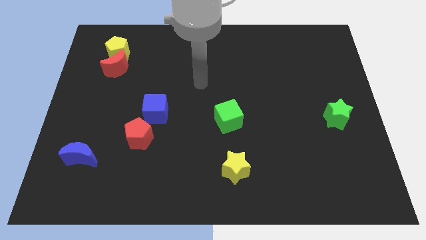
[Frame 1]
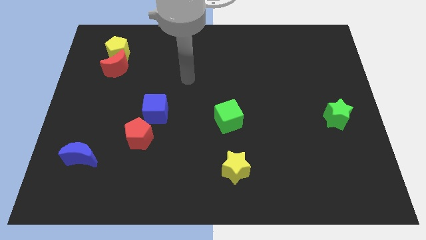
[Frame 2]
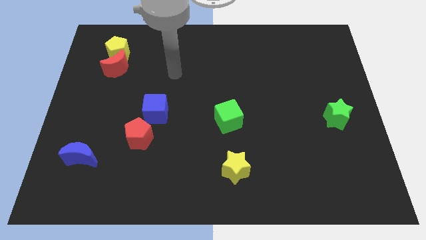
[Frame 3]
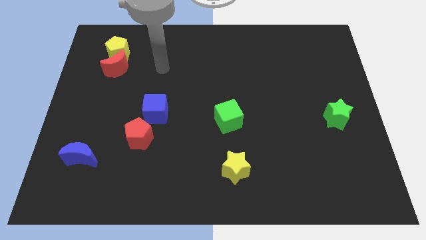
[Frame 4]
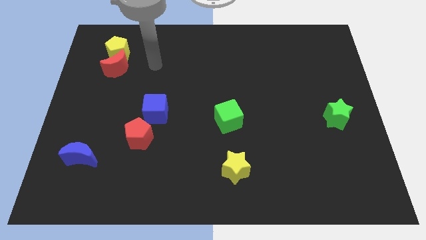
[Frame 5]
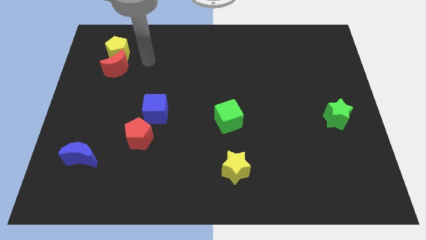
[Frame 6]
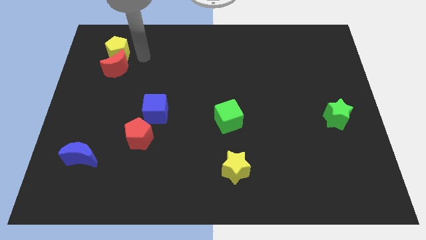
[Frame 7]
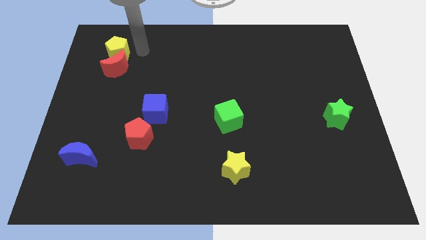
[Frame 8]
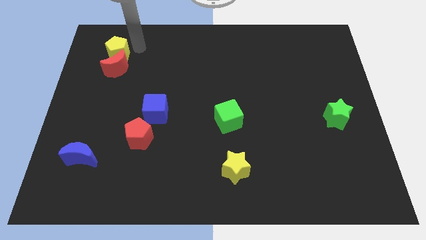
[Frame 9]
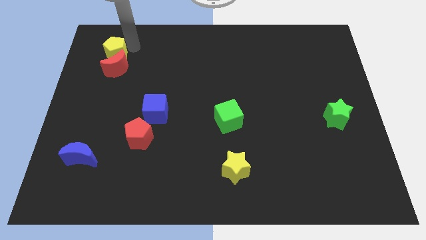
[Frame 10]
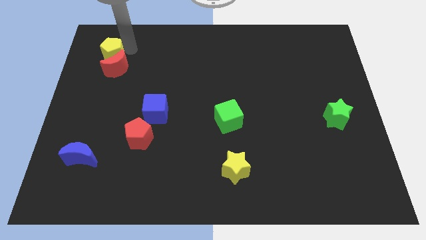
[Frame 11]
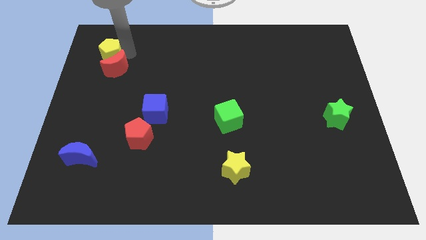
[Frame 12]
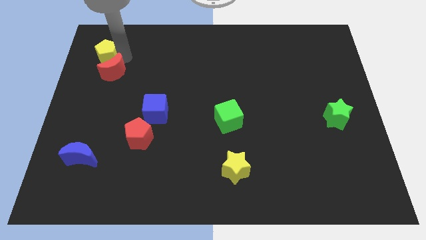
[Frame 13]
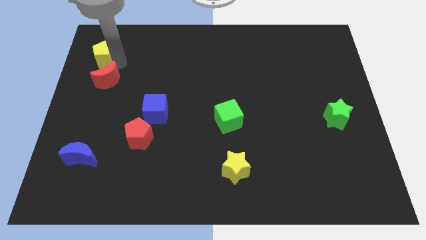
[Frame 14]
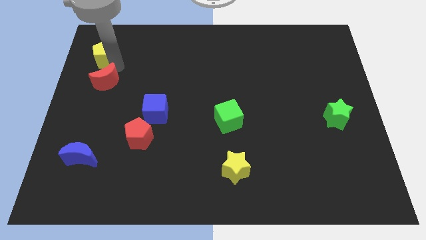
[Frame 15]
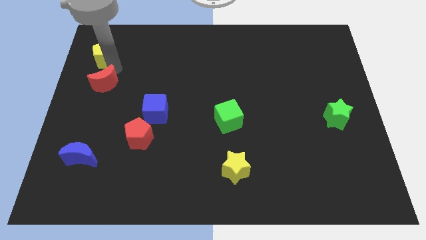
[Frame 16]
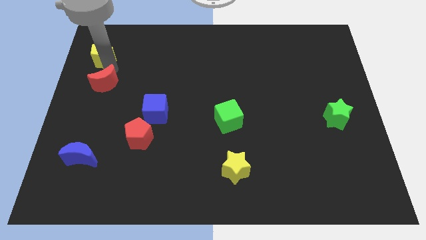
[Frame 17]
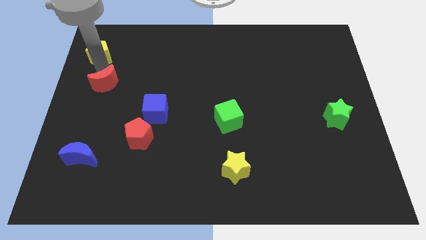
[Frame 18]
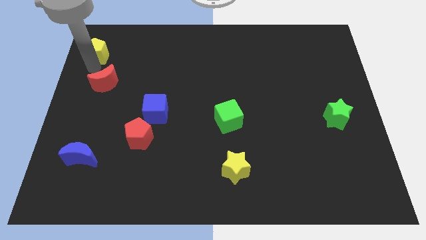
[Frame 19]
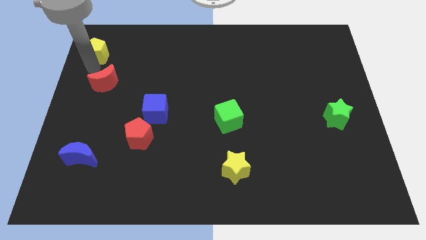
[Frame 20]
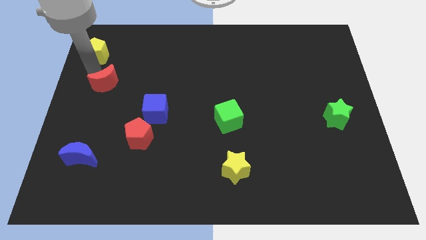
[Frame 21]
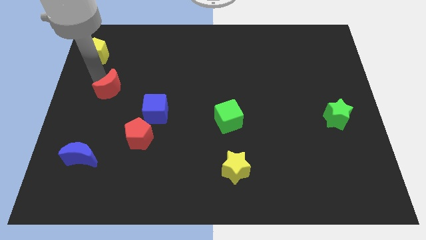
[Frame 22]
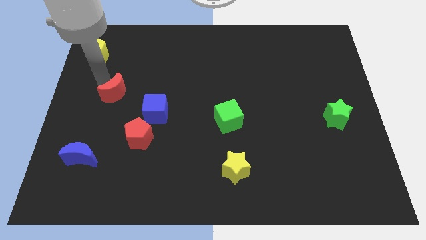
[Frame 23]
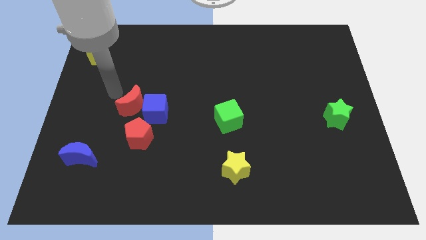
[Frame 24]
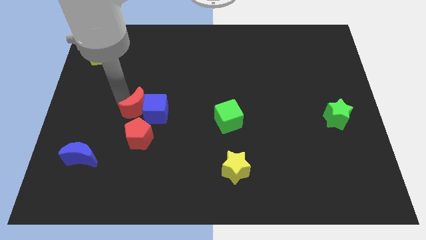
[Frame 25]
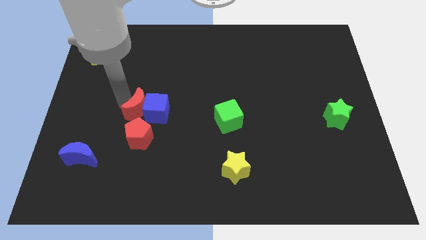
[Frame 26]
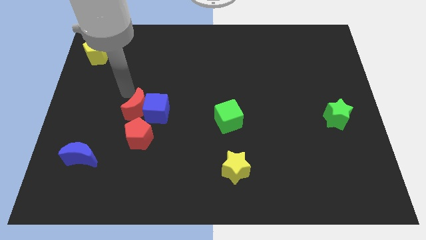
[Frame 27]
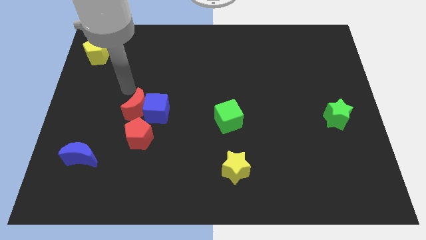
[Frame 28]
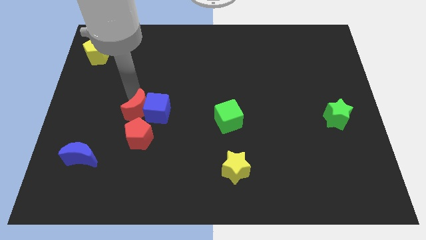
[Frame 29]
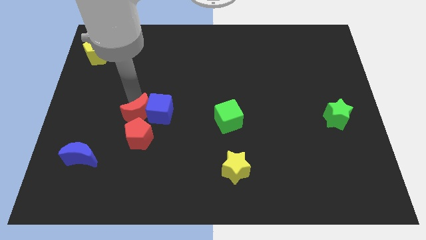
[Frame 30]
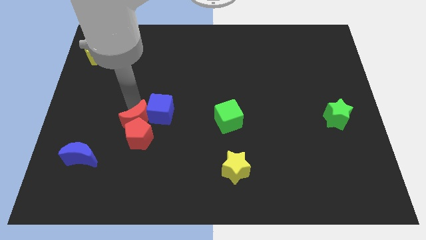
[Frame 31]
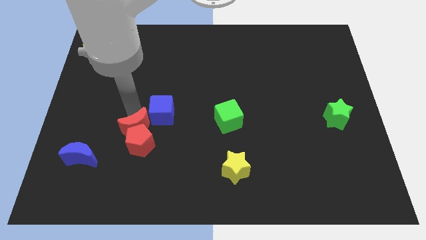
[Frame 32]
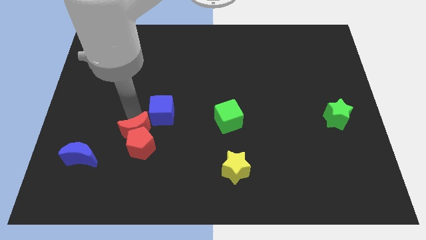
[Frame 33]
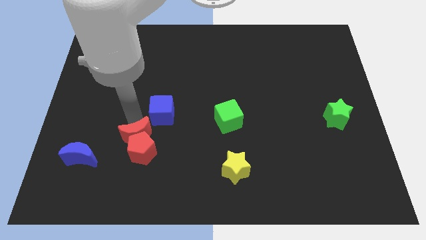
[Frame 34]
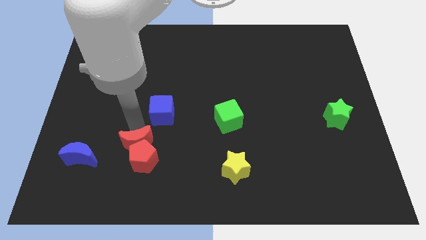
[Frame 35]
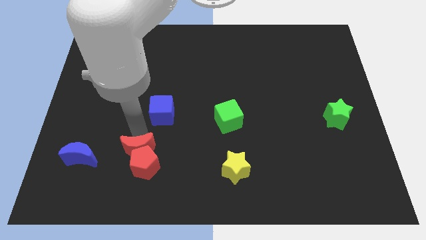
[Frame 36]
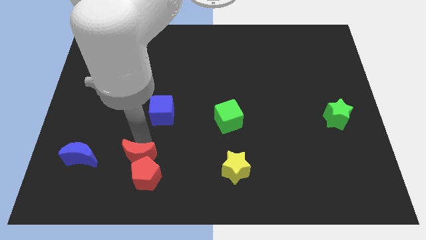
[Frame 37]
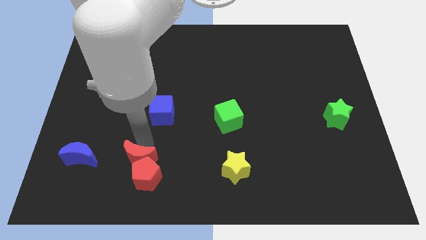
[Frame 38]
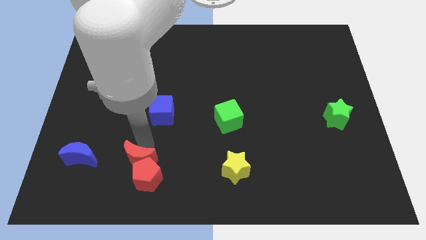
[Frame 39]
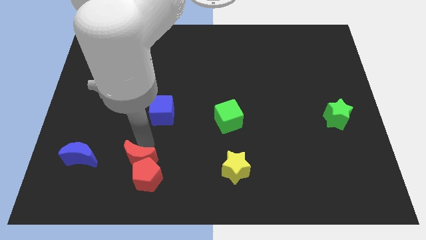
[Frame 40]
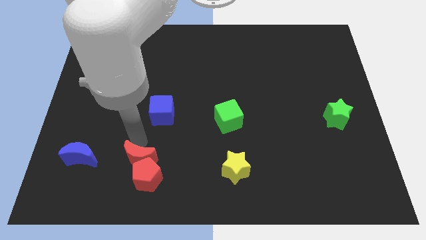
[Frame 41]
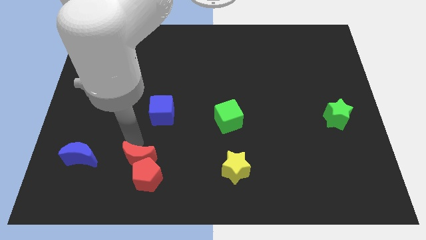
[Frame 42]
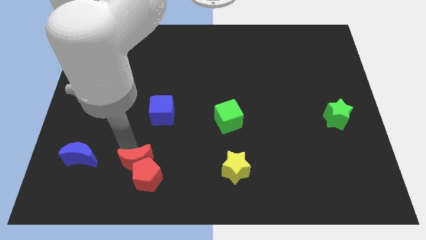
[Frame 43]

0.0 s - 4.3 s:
slide the red crescent towards the red pentagon

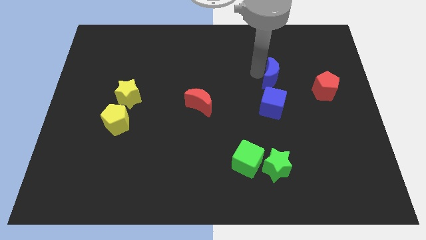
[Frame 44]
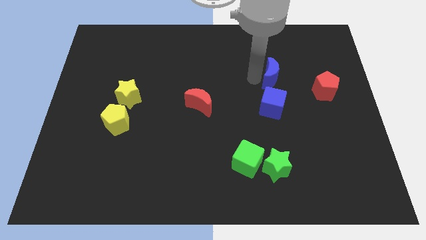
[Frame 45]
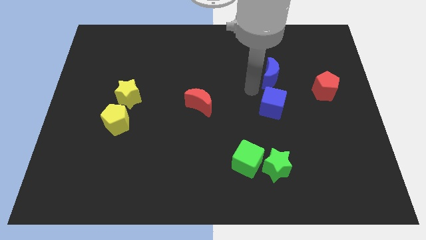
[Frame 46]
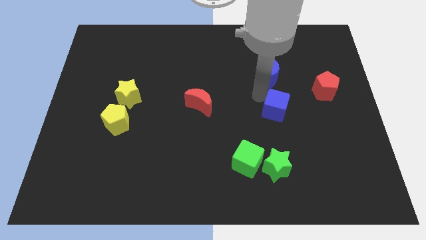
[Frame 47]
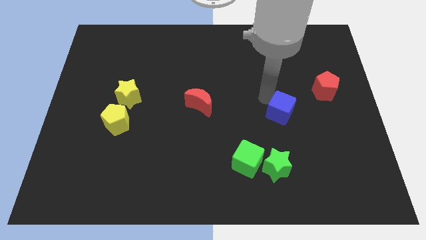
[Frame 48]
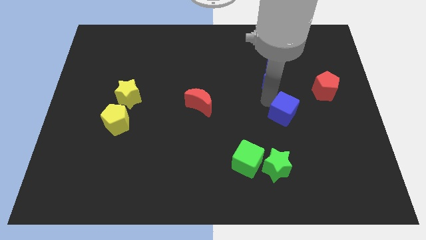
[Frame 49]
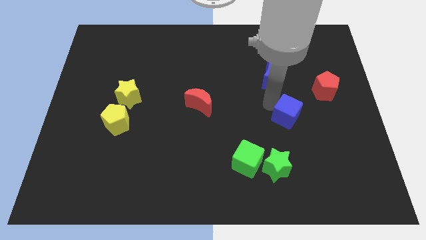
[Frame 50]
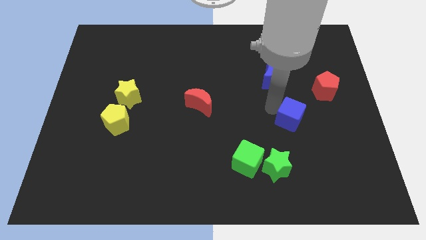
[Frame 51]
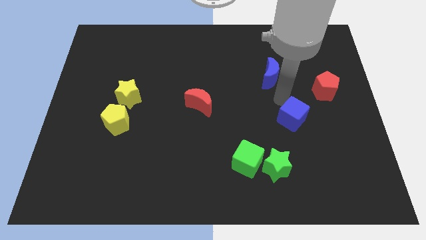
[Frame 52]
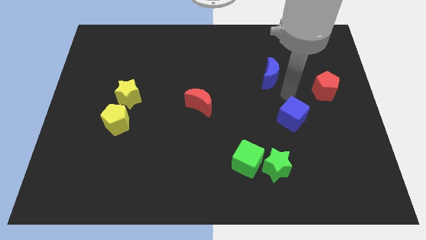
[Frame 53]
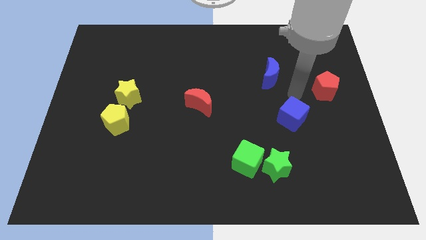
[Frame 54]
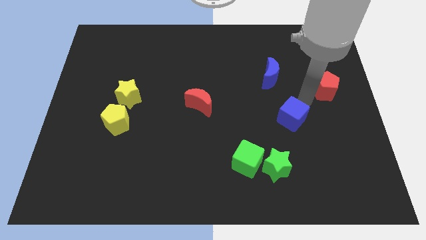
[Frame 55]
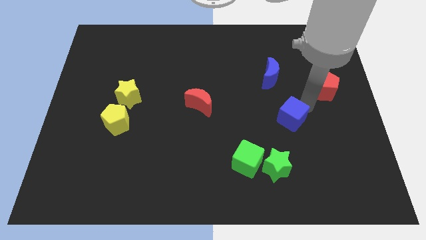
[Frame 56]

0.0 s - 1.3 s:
separate the blue cube and the blue crescent

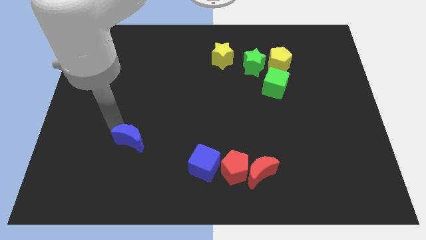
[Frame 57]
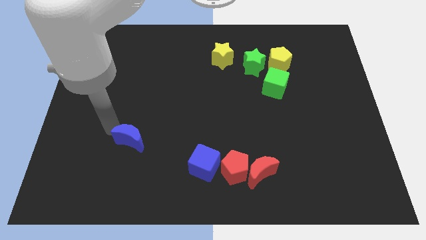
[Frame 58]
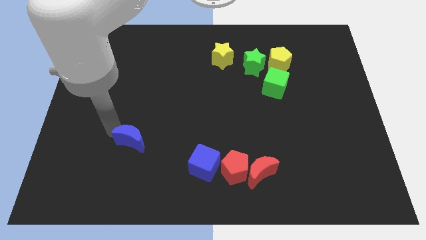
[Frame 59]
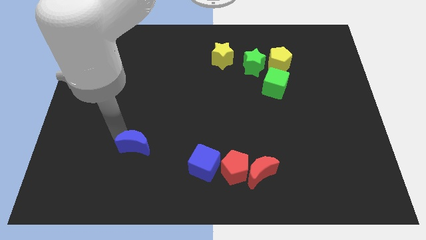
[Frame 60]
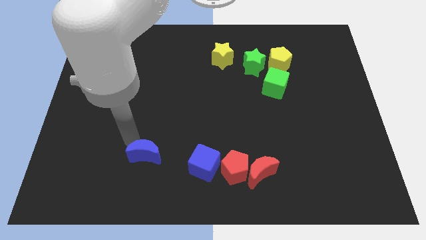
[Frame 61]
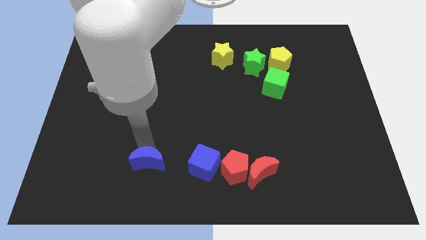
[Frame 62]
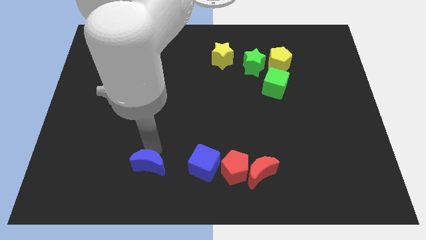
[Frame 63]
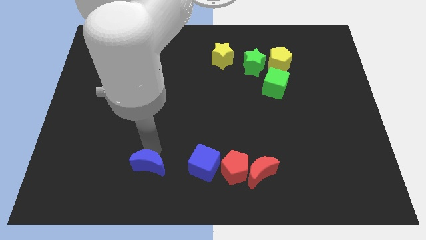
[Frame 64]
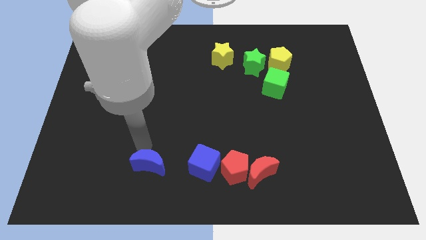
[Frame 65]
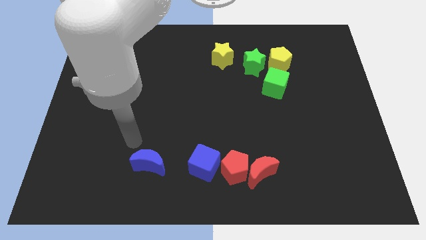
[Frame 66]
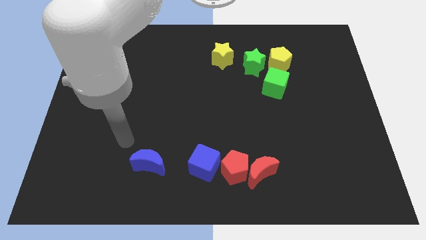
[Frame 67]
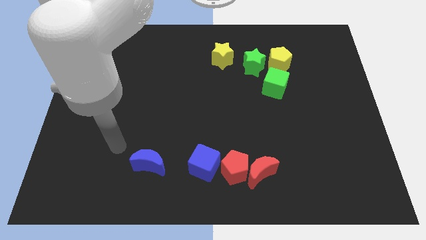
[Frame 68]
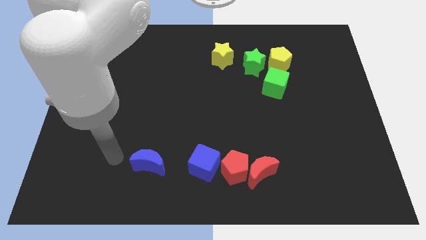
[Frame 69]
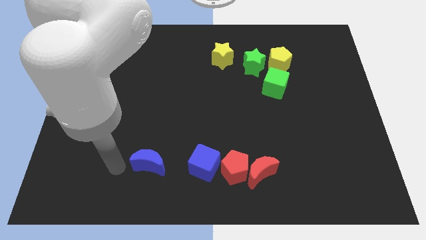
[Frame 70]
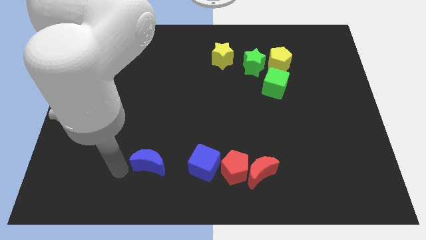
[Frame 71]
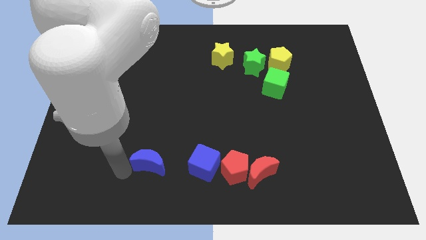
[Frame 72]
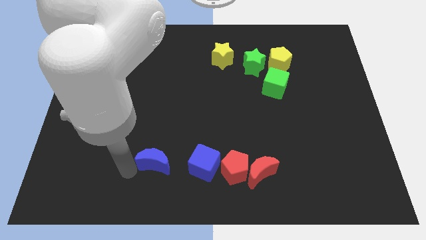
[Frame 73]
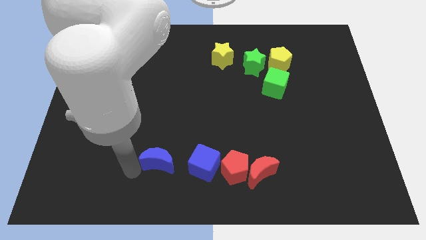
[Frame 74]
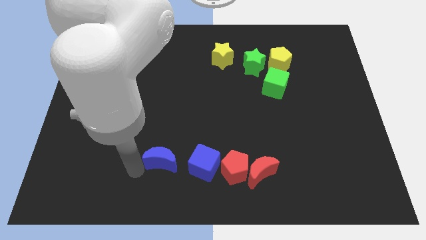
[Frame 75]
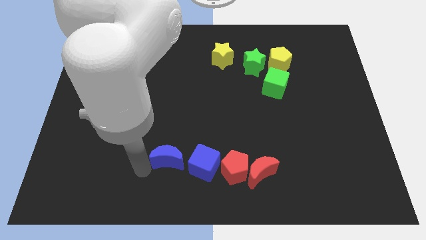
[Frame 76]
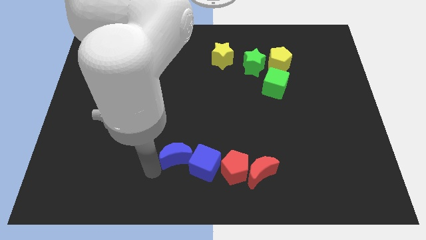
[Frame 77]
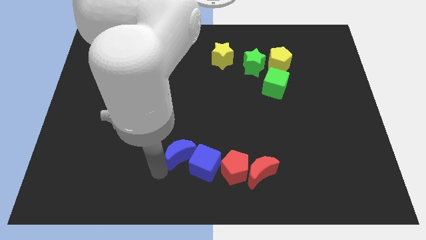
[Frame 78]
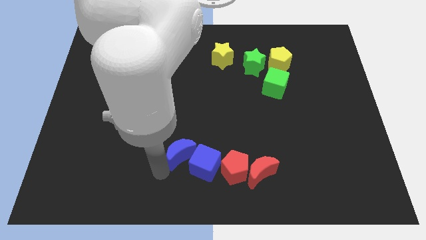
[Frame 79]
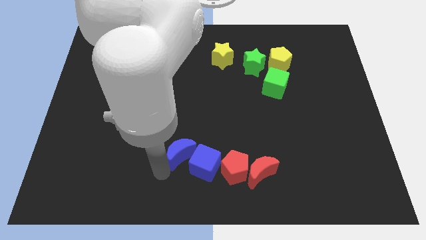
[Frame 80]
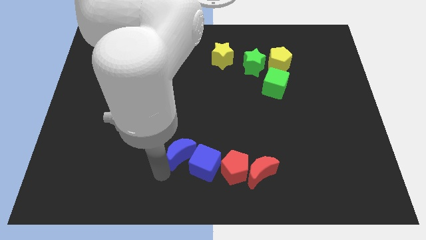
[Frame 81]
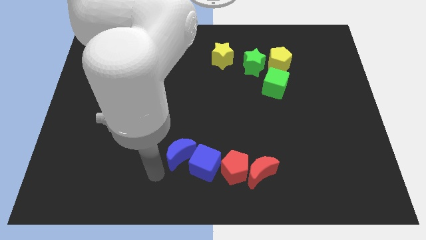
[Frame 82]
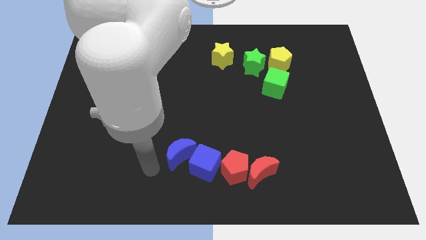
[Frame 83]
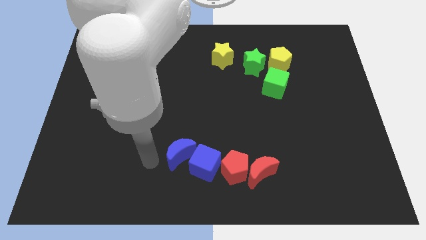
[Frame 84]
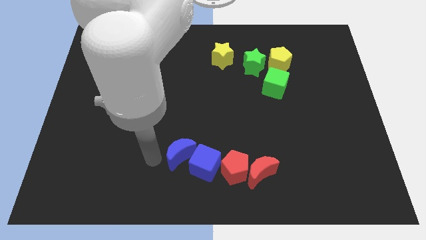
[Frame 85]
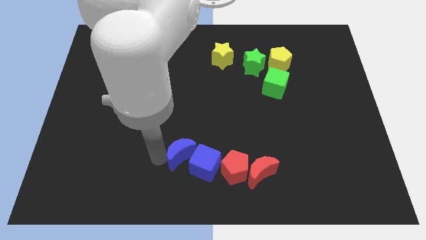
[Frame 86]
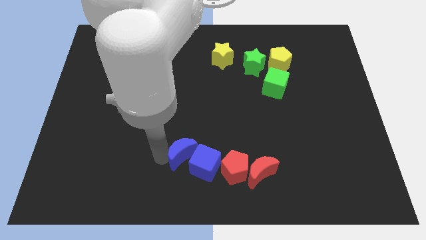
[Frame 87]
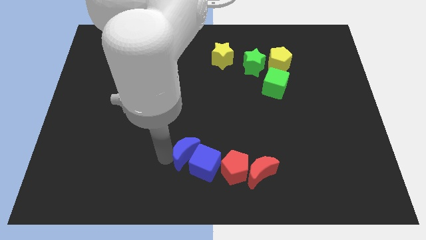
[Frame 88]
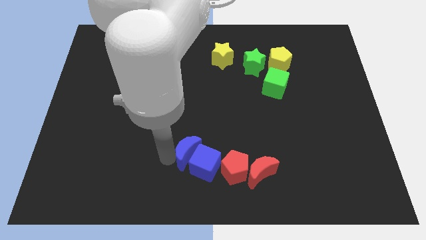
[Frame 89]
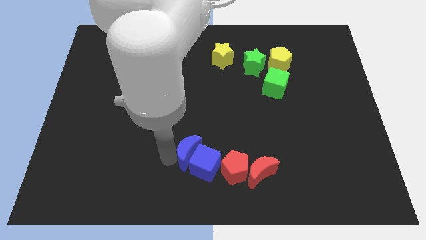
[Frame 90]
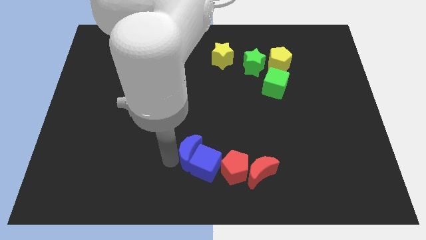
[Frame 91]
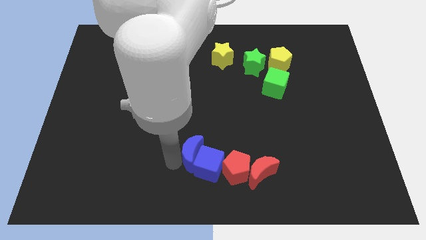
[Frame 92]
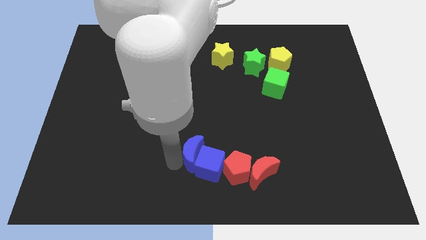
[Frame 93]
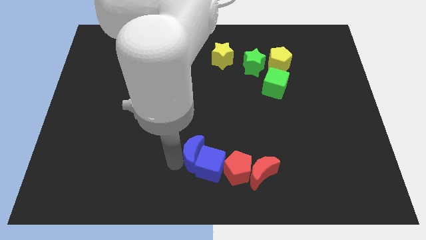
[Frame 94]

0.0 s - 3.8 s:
push blue crescent in to blue cube
